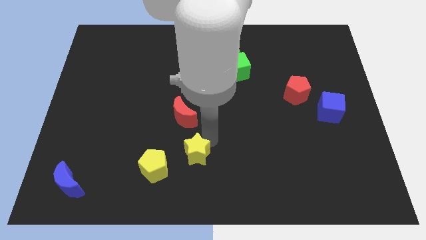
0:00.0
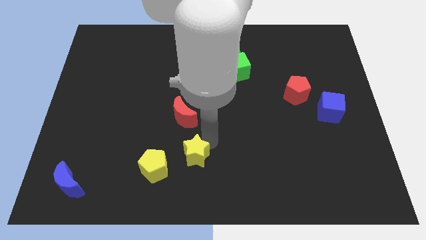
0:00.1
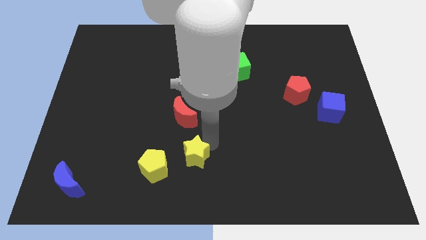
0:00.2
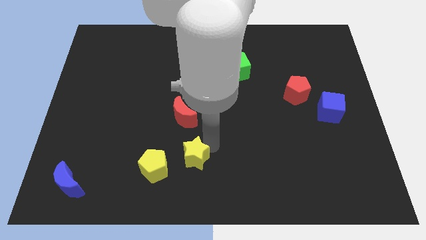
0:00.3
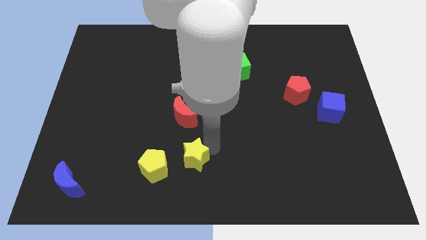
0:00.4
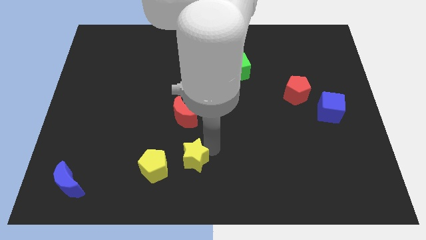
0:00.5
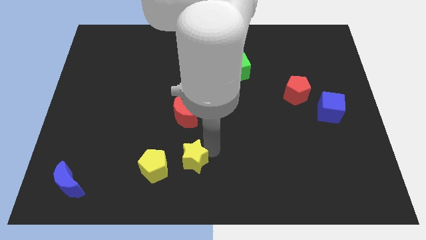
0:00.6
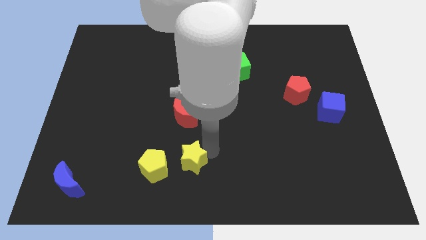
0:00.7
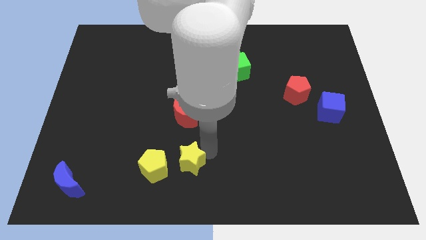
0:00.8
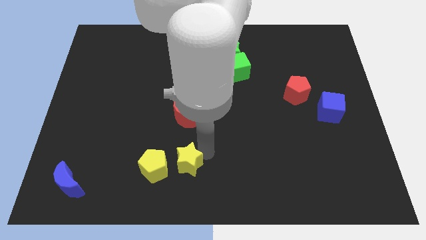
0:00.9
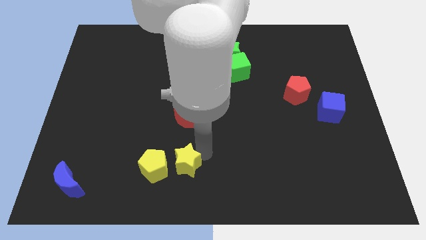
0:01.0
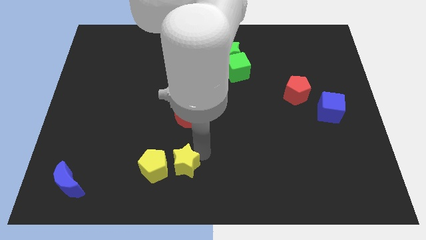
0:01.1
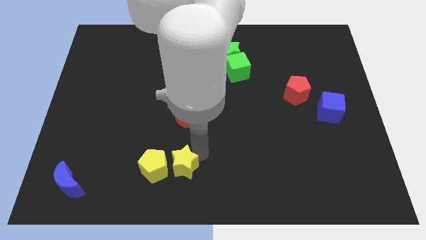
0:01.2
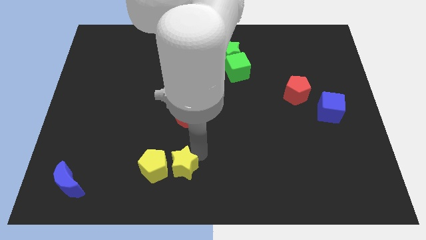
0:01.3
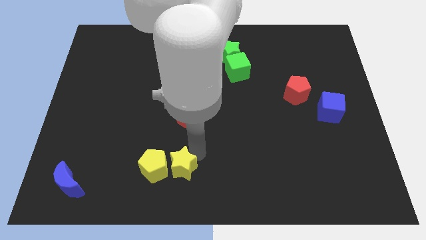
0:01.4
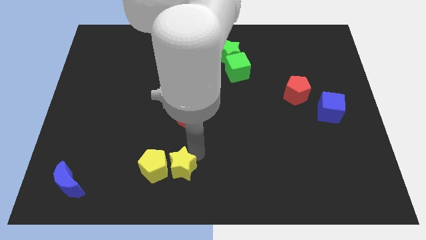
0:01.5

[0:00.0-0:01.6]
put the yellow star on the right side of the yellow pentagon

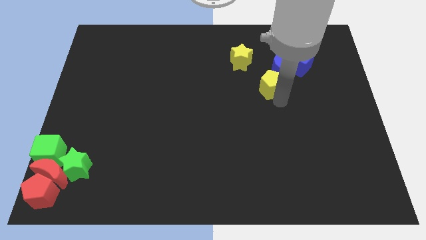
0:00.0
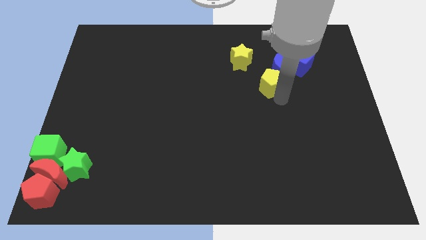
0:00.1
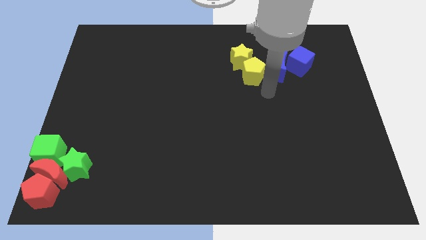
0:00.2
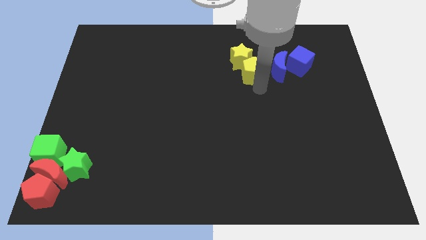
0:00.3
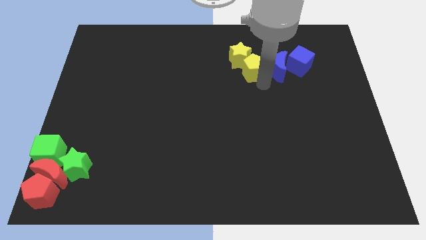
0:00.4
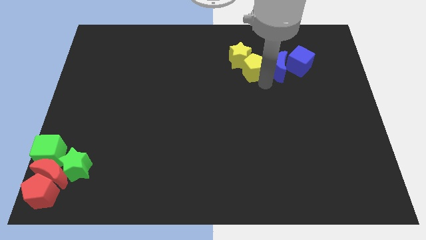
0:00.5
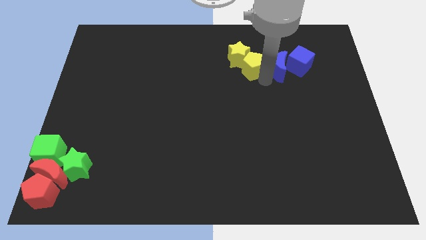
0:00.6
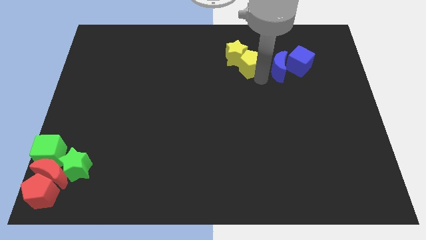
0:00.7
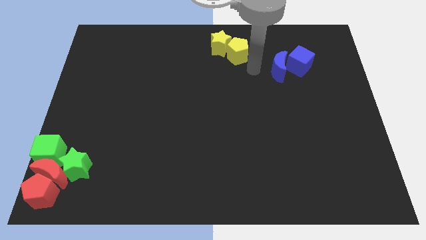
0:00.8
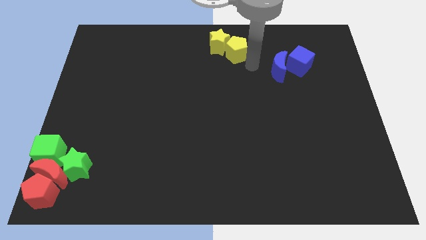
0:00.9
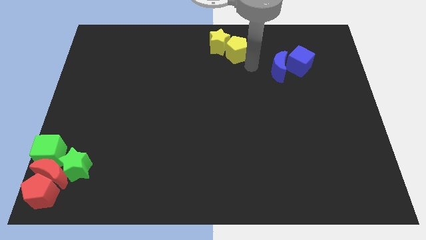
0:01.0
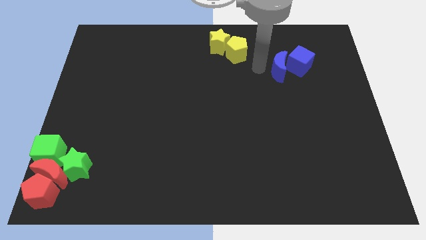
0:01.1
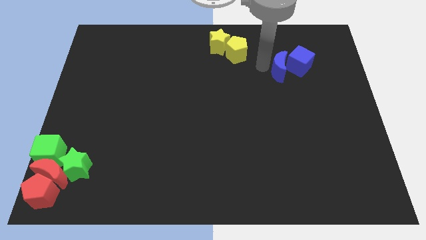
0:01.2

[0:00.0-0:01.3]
place the yellow pentagon below the yellow star

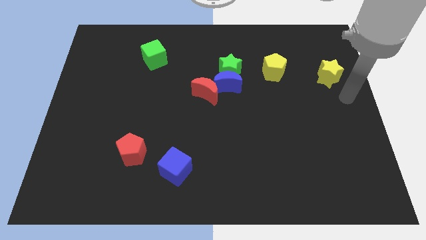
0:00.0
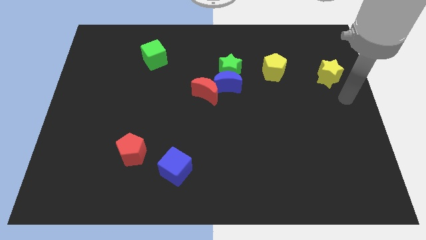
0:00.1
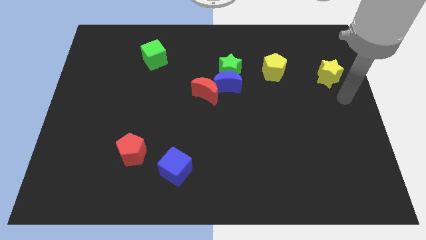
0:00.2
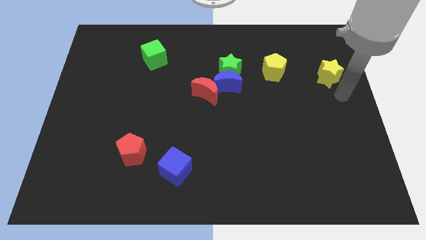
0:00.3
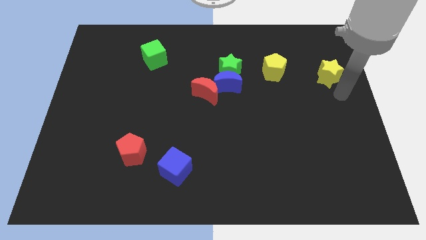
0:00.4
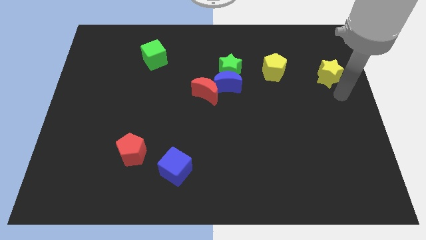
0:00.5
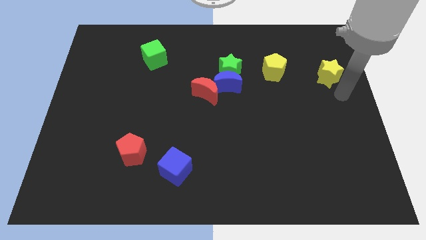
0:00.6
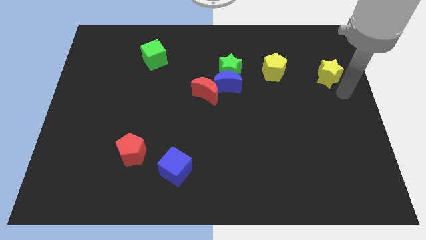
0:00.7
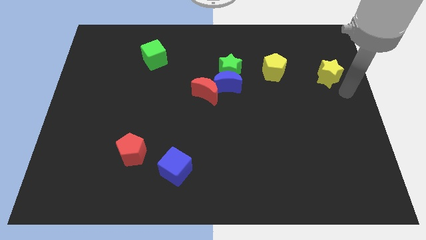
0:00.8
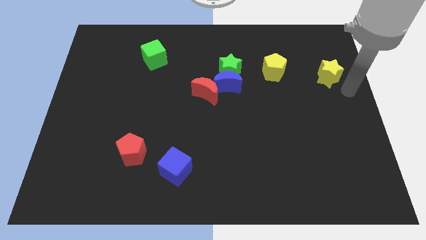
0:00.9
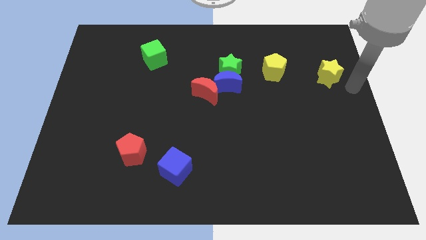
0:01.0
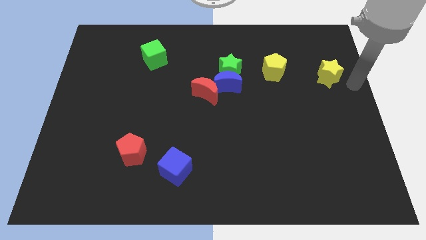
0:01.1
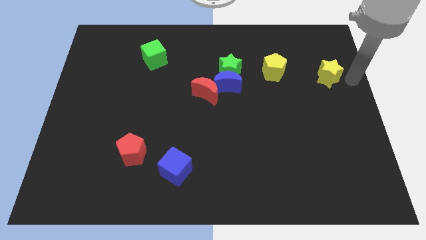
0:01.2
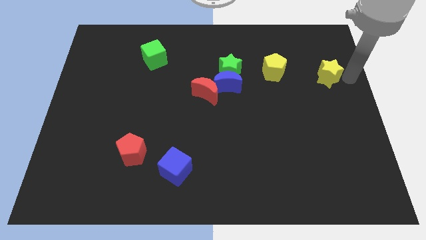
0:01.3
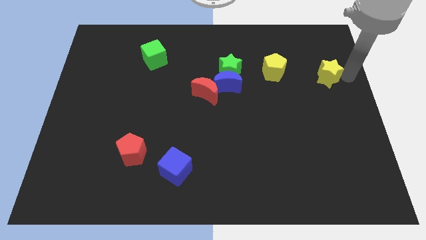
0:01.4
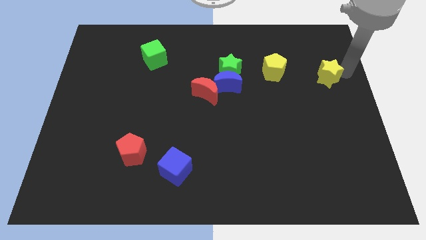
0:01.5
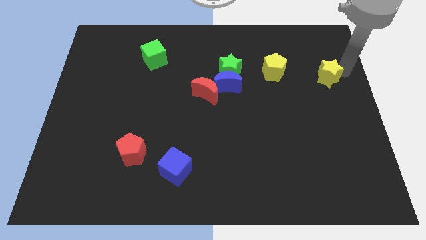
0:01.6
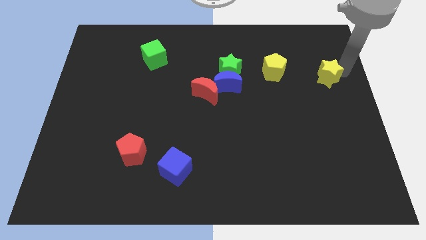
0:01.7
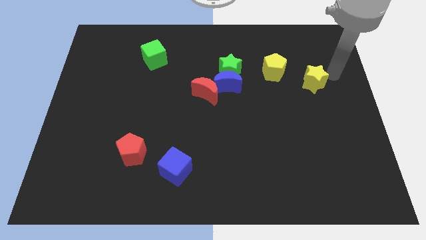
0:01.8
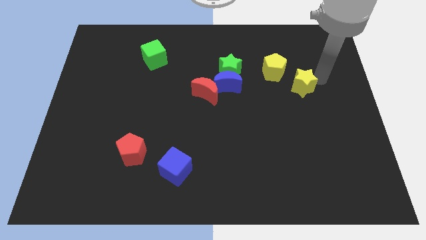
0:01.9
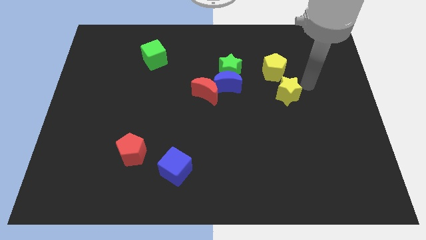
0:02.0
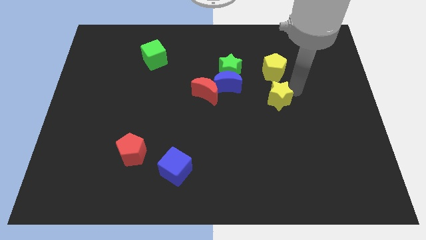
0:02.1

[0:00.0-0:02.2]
push the yellow star below to the yellow pentagon

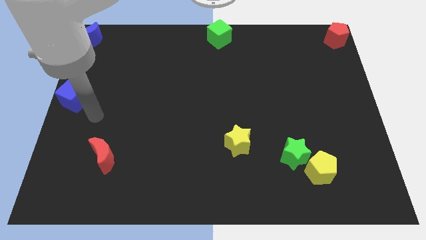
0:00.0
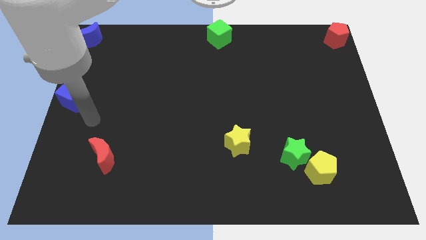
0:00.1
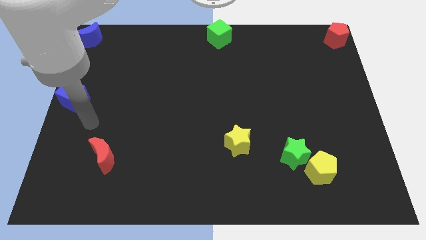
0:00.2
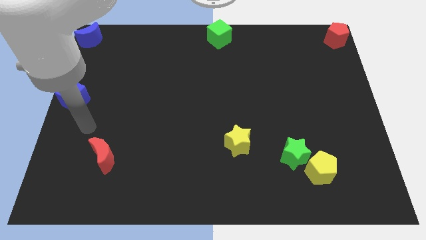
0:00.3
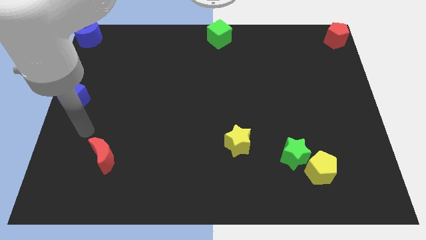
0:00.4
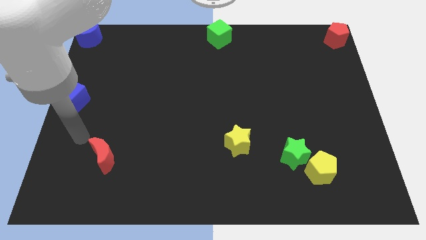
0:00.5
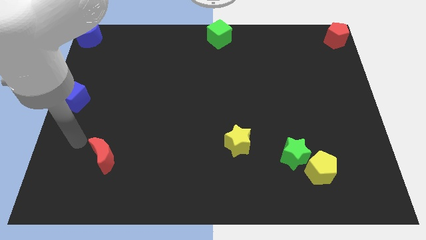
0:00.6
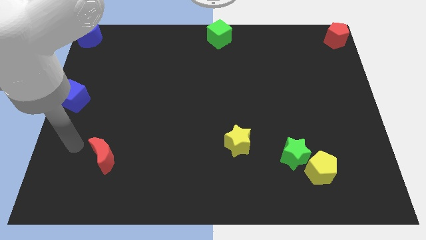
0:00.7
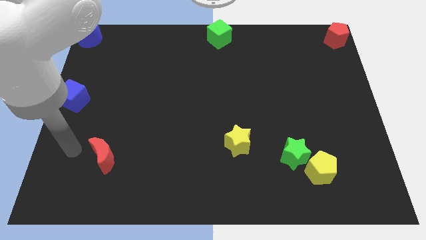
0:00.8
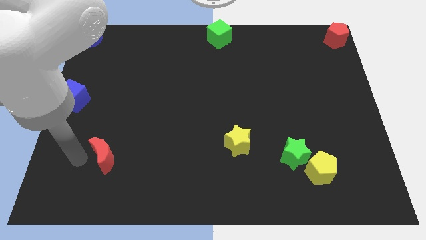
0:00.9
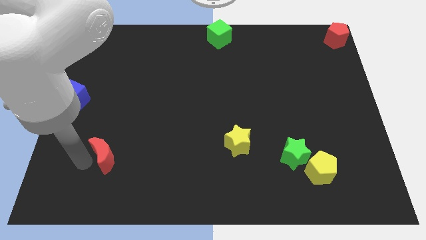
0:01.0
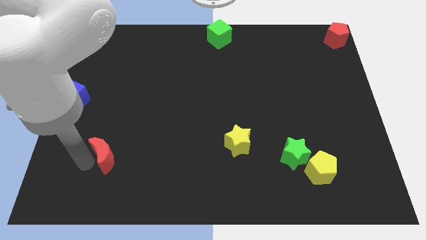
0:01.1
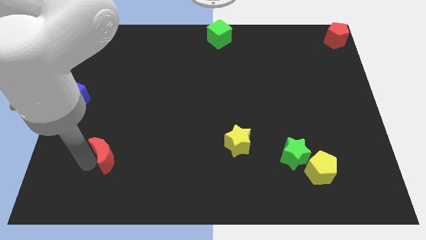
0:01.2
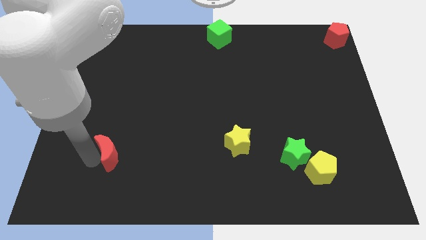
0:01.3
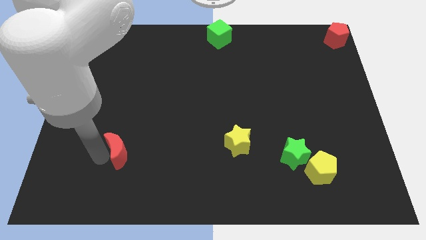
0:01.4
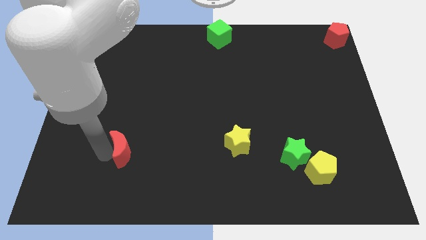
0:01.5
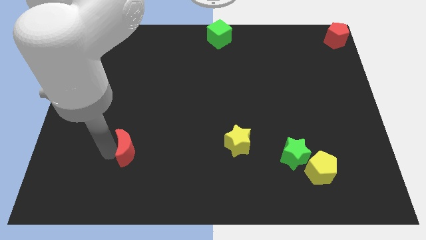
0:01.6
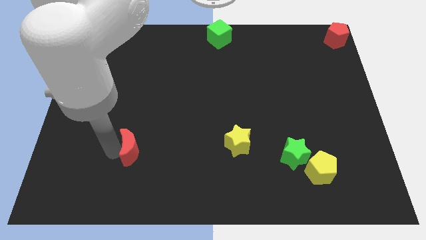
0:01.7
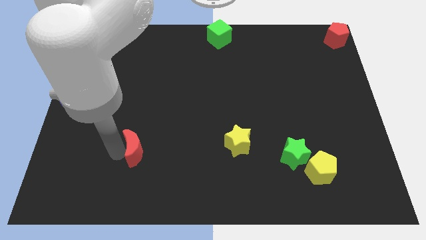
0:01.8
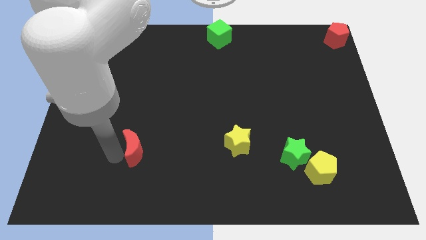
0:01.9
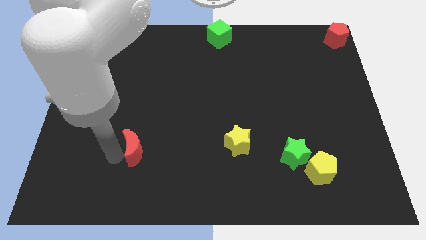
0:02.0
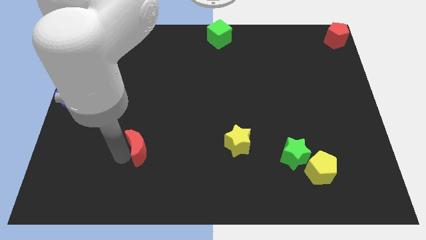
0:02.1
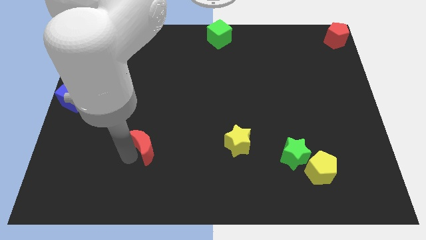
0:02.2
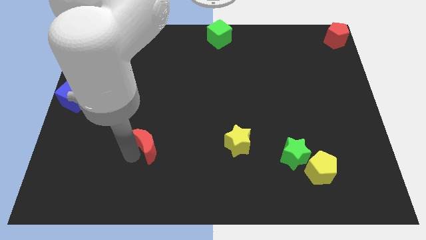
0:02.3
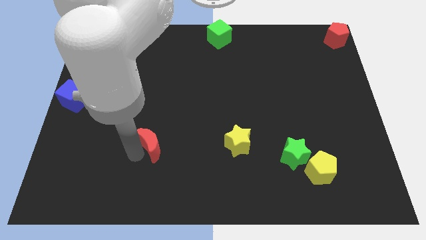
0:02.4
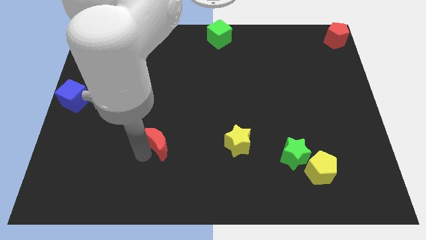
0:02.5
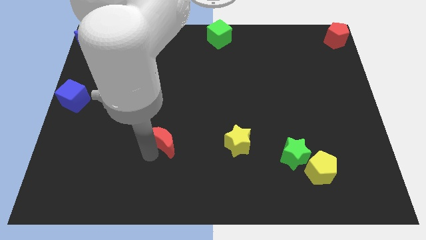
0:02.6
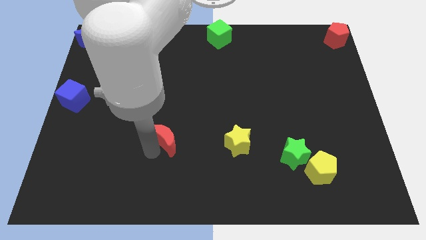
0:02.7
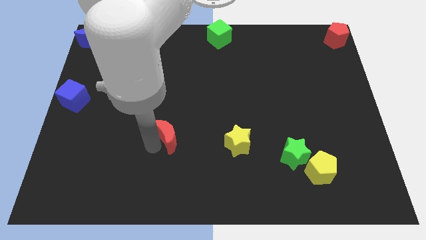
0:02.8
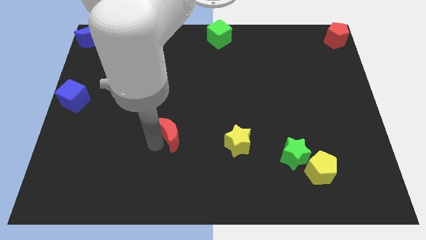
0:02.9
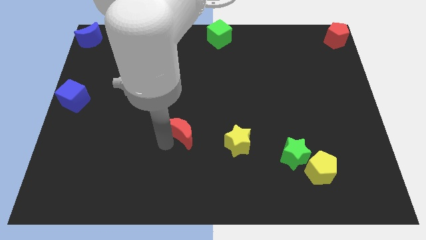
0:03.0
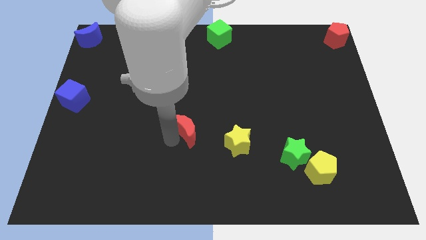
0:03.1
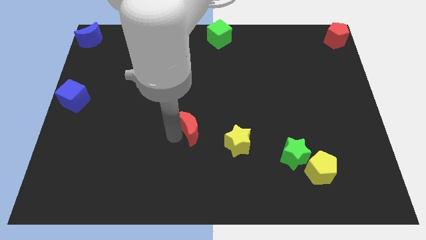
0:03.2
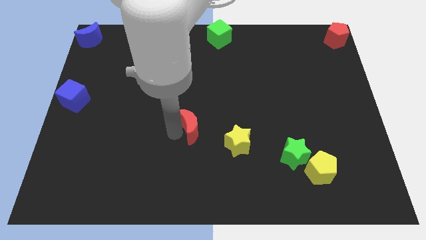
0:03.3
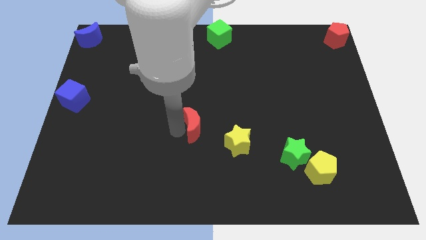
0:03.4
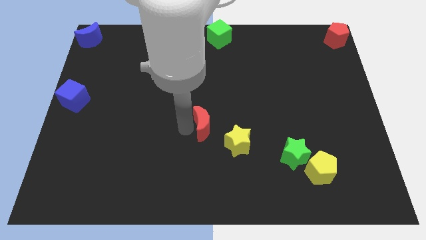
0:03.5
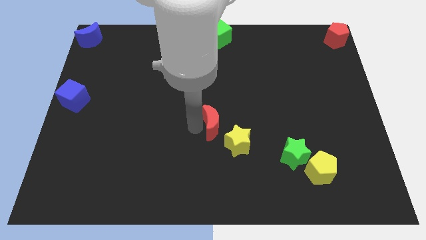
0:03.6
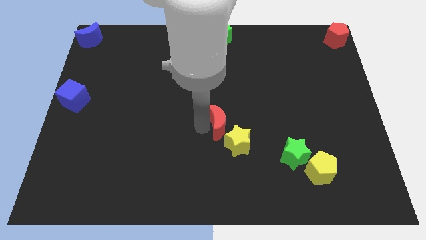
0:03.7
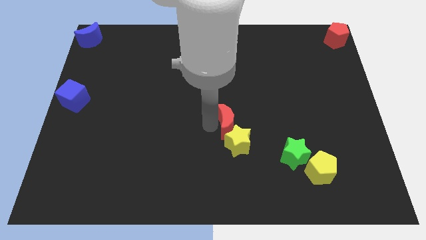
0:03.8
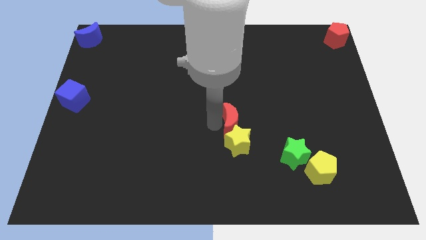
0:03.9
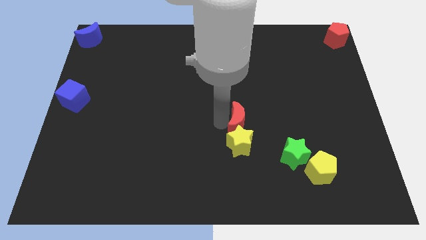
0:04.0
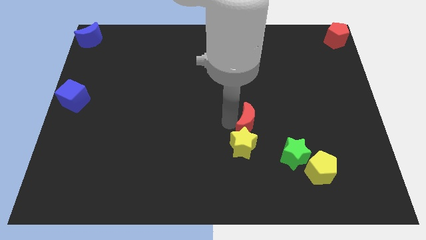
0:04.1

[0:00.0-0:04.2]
move the red moon to the top of the yellow star
